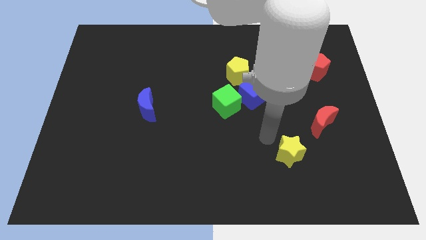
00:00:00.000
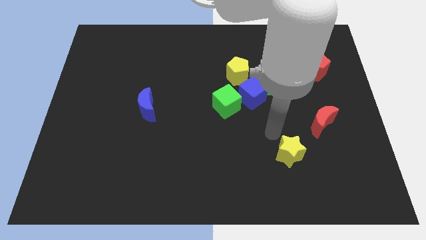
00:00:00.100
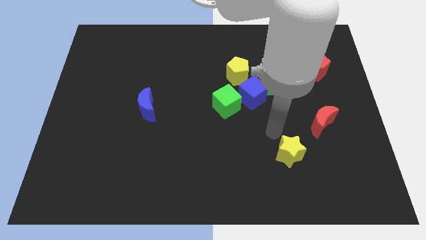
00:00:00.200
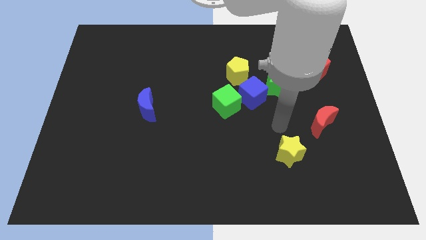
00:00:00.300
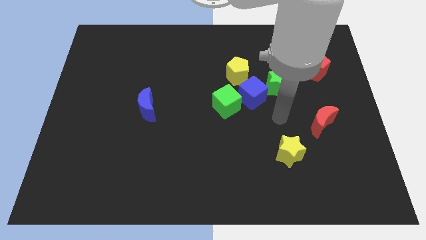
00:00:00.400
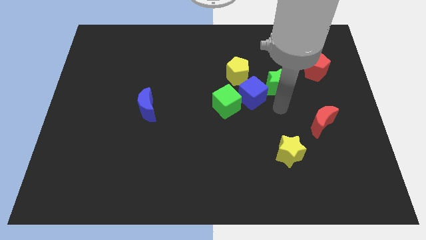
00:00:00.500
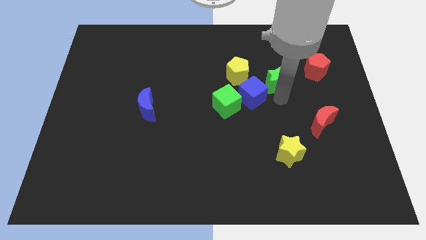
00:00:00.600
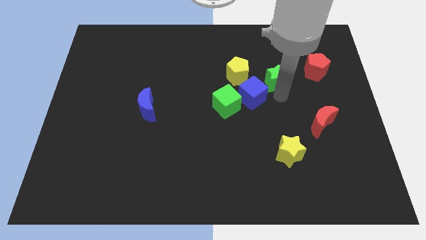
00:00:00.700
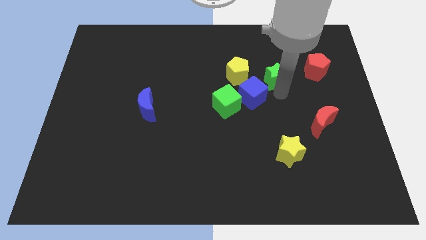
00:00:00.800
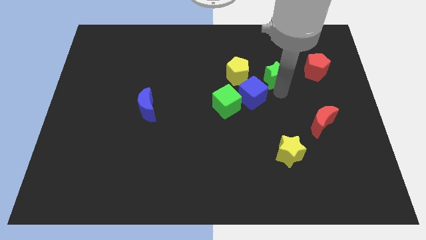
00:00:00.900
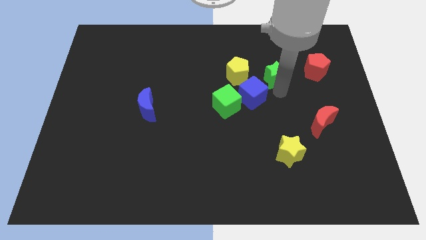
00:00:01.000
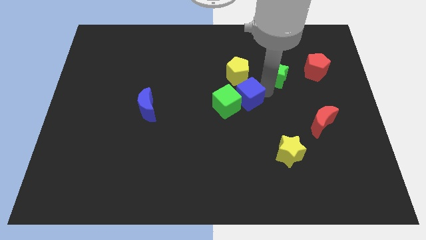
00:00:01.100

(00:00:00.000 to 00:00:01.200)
move the green star slightly top side

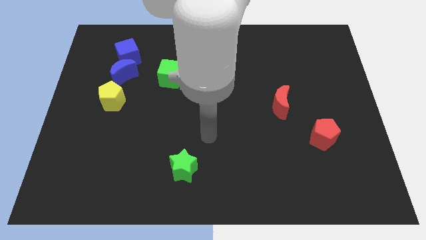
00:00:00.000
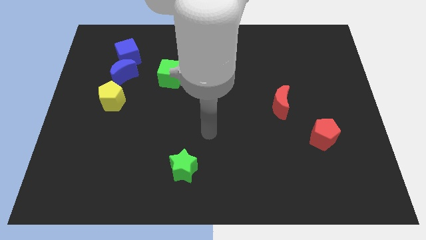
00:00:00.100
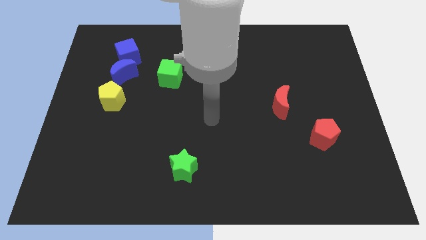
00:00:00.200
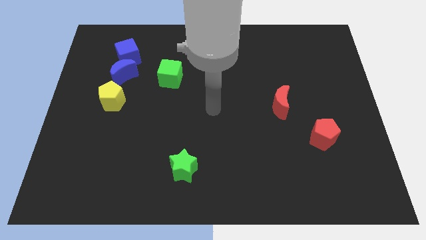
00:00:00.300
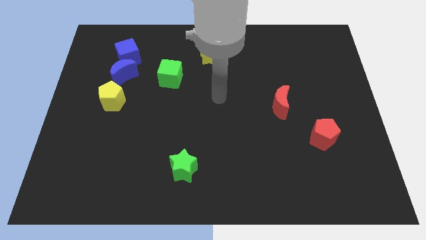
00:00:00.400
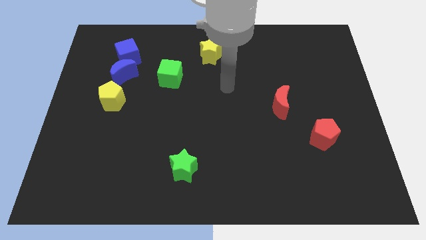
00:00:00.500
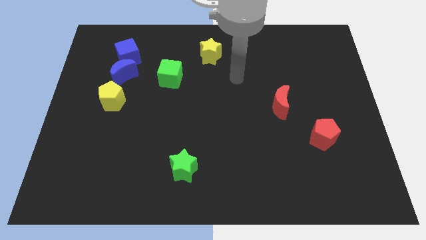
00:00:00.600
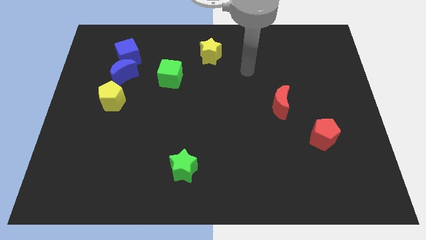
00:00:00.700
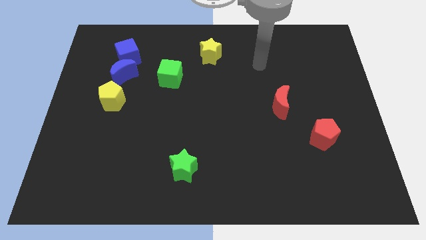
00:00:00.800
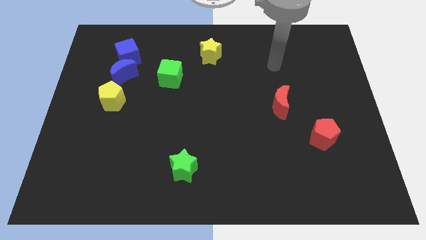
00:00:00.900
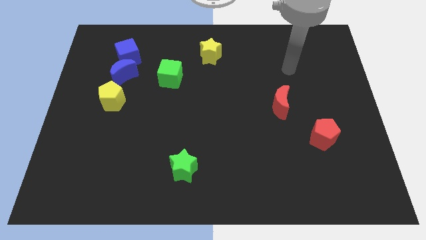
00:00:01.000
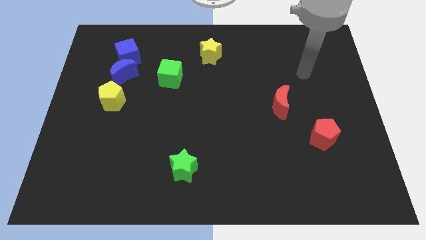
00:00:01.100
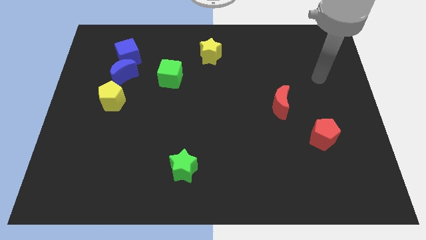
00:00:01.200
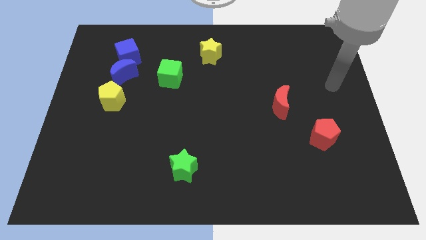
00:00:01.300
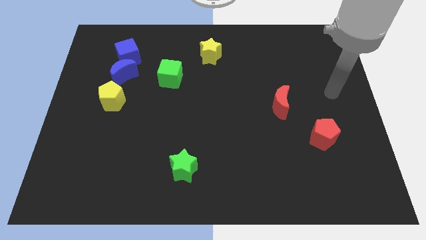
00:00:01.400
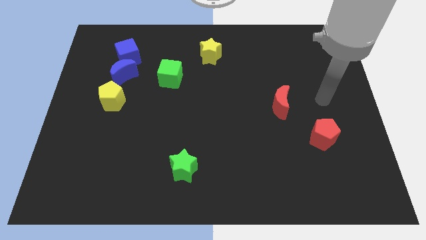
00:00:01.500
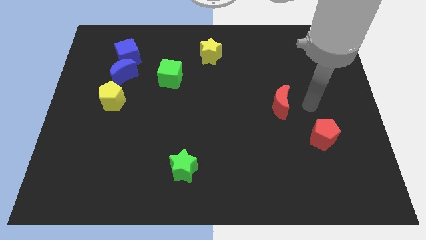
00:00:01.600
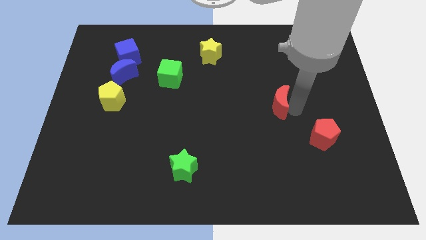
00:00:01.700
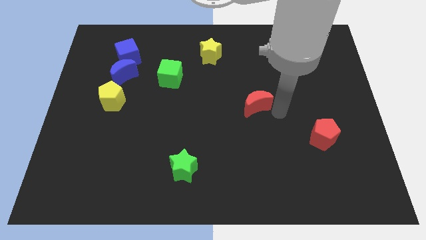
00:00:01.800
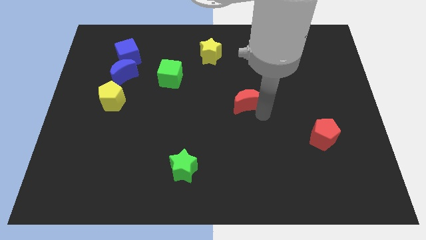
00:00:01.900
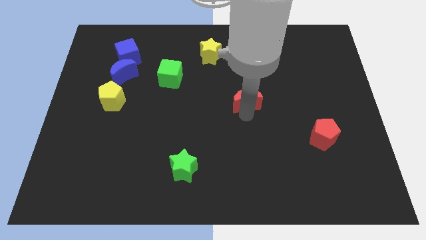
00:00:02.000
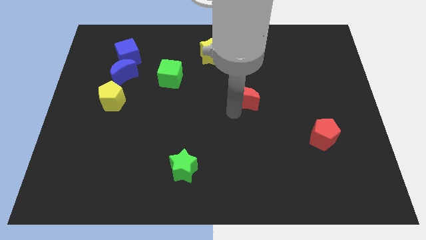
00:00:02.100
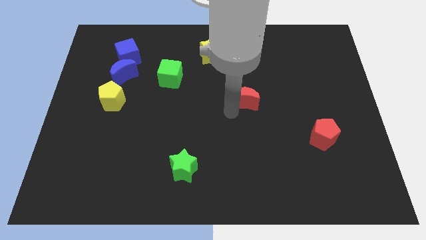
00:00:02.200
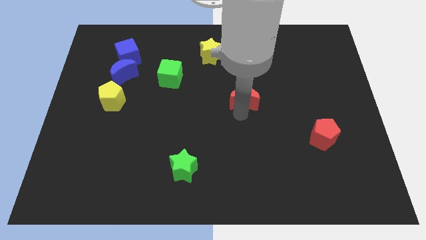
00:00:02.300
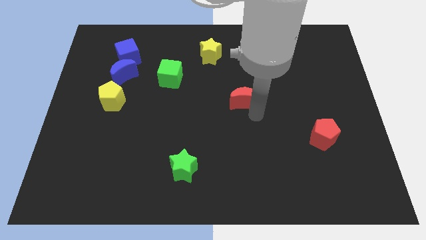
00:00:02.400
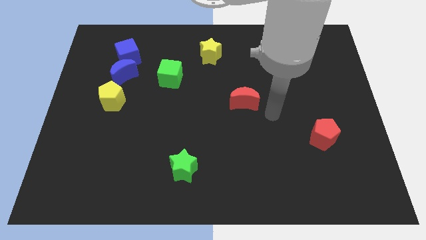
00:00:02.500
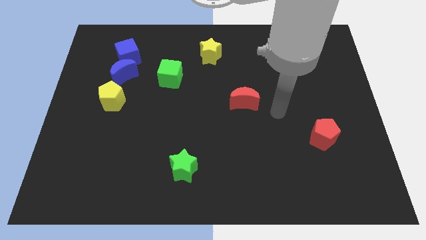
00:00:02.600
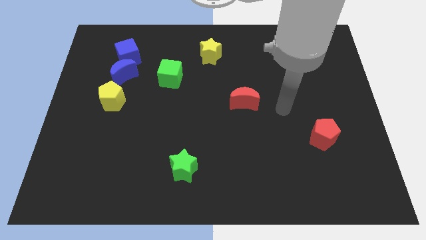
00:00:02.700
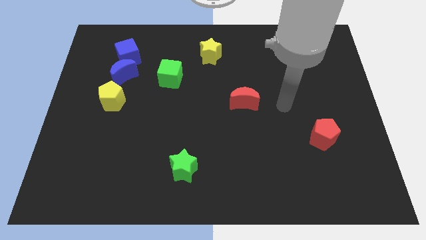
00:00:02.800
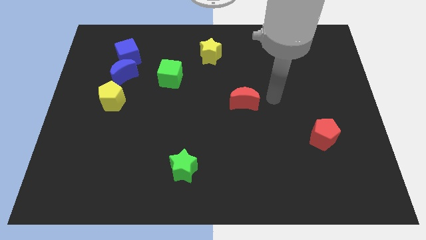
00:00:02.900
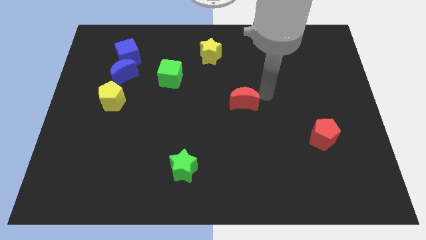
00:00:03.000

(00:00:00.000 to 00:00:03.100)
push the red moon towards the center of the board

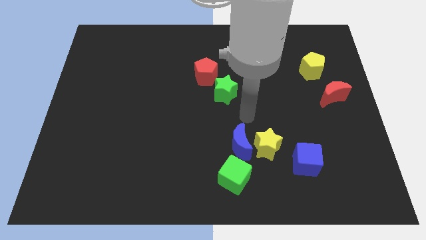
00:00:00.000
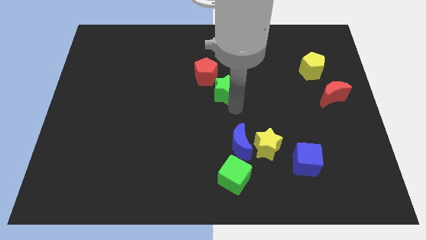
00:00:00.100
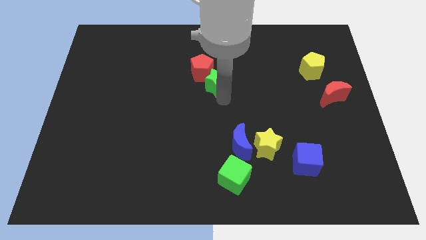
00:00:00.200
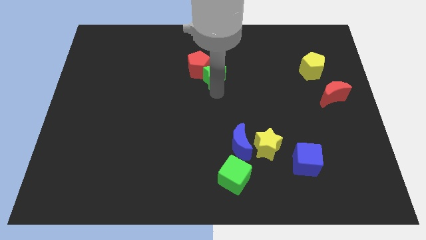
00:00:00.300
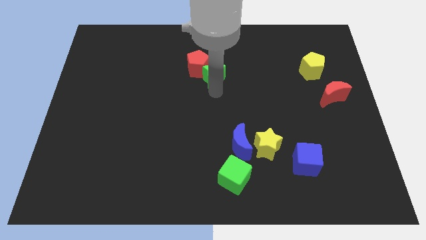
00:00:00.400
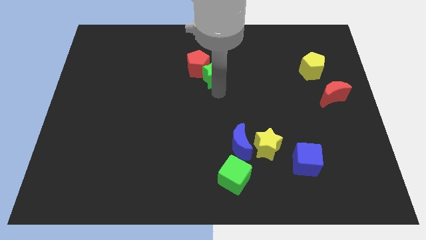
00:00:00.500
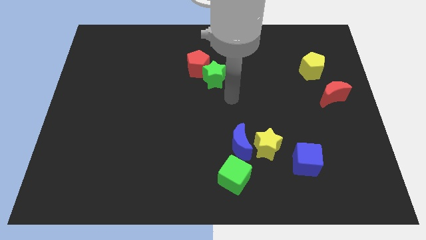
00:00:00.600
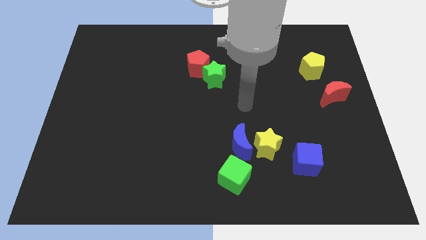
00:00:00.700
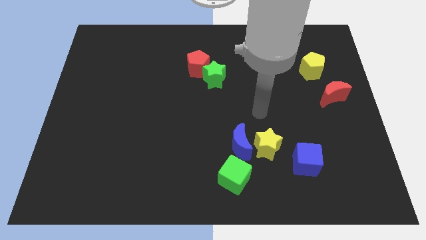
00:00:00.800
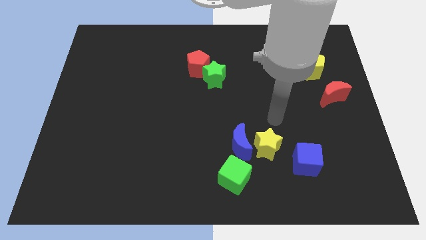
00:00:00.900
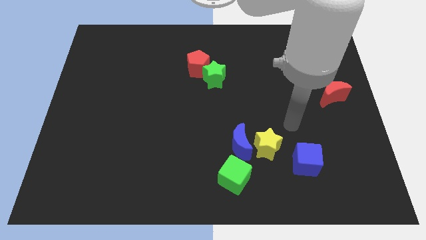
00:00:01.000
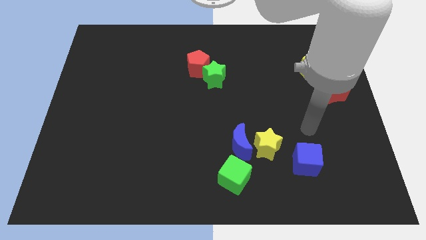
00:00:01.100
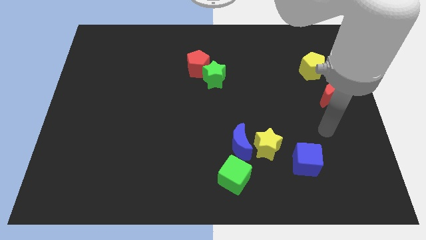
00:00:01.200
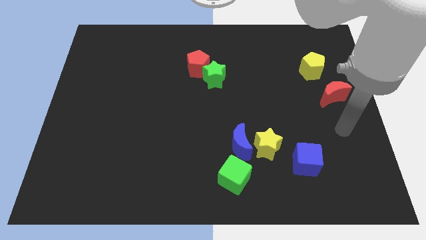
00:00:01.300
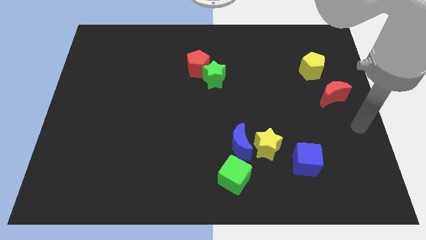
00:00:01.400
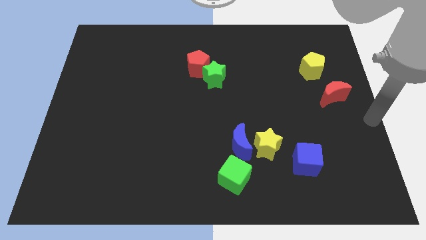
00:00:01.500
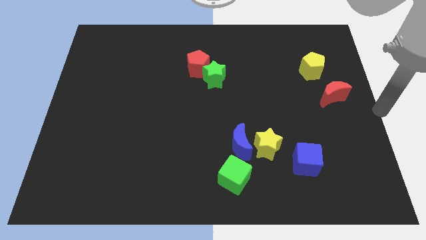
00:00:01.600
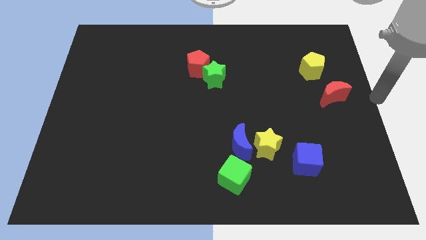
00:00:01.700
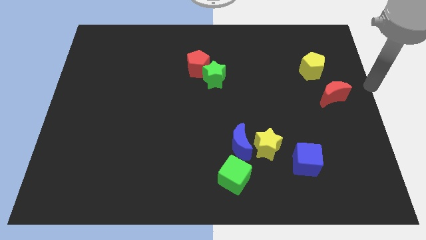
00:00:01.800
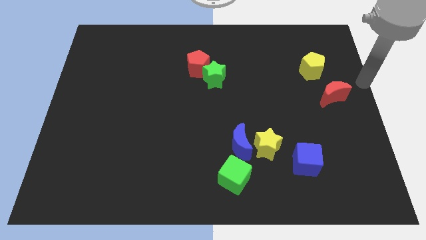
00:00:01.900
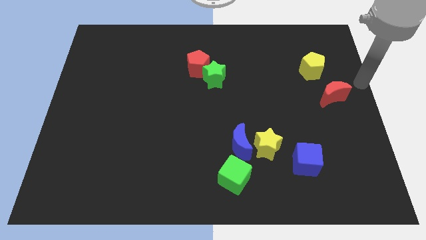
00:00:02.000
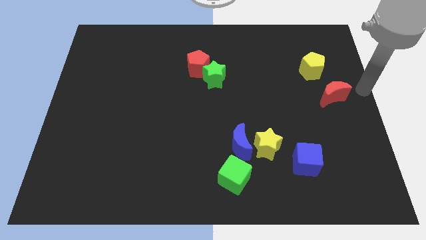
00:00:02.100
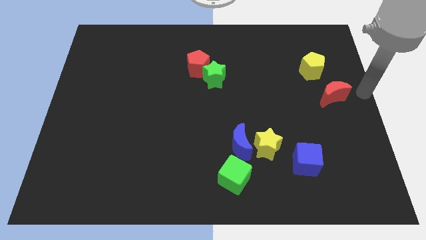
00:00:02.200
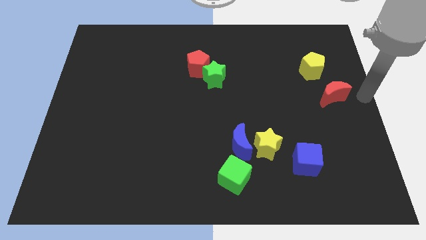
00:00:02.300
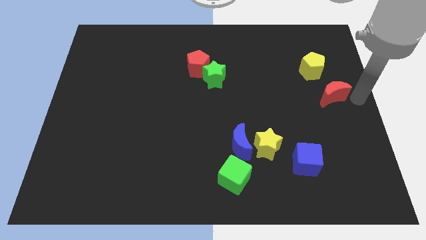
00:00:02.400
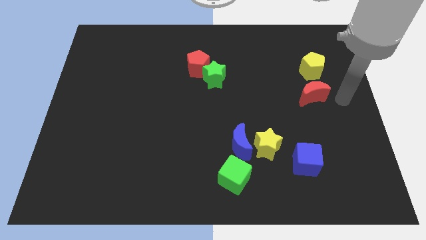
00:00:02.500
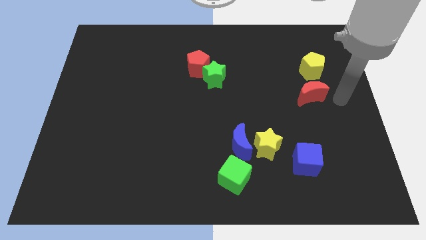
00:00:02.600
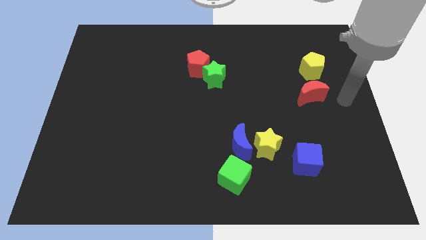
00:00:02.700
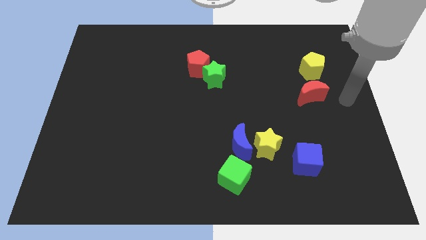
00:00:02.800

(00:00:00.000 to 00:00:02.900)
push green star into the red pentagon

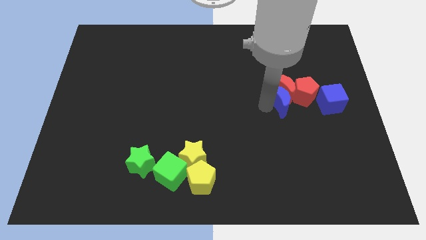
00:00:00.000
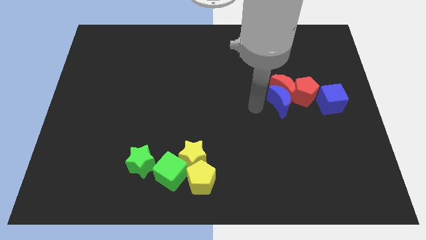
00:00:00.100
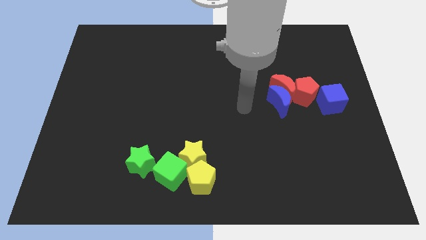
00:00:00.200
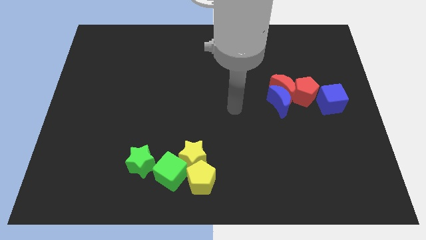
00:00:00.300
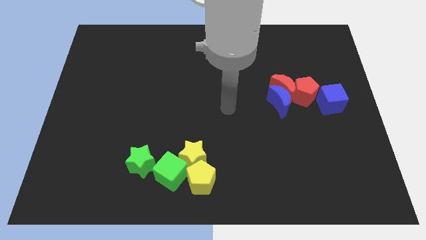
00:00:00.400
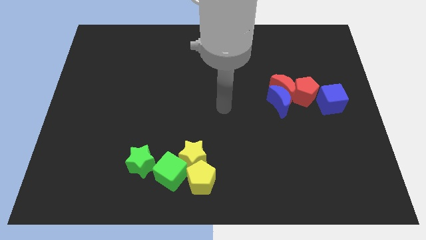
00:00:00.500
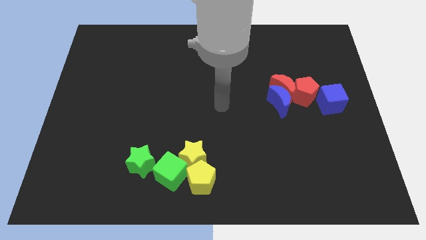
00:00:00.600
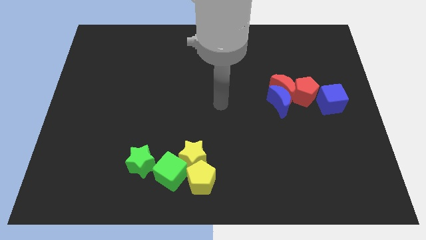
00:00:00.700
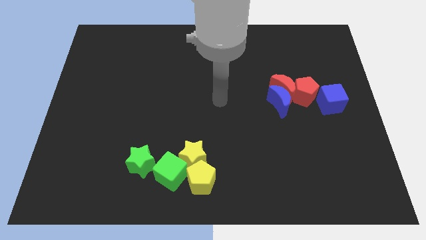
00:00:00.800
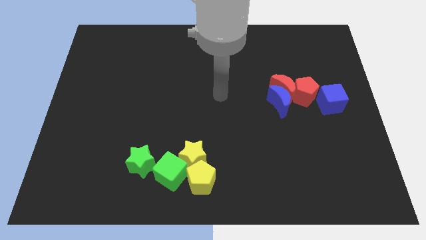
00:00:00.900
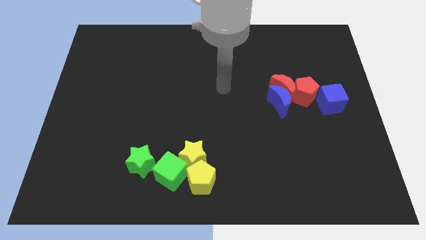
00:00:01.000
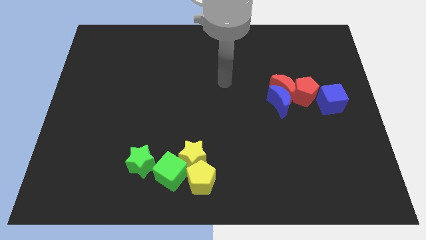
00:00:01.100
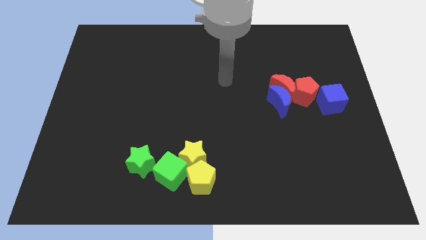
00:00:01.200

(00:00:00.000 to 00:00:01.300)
move your arm to the center of the board

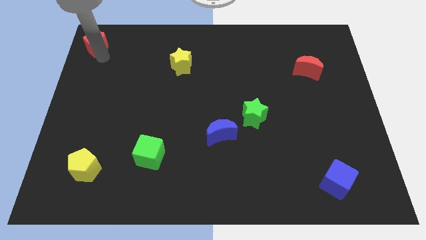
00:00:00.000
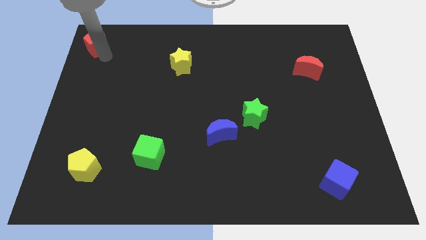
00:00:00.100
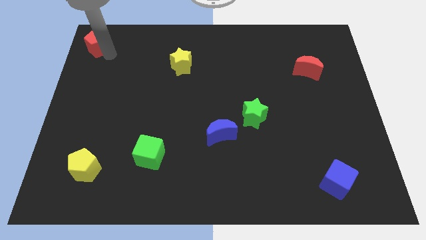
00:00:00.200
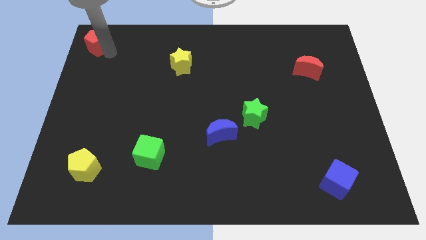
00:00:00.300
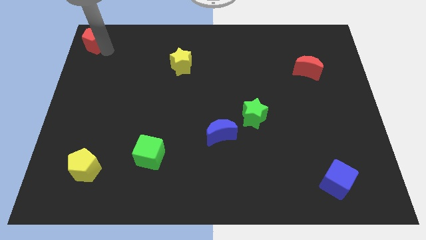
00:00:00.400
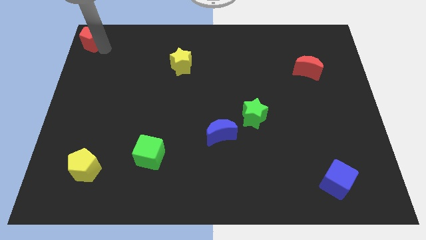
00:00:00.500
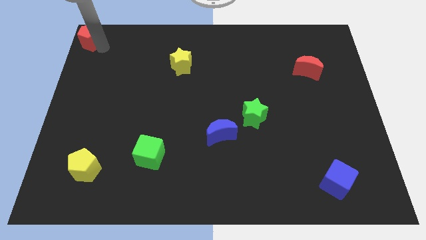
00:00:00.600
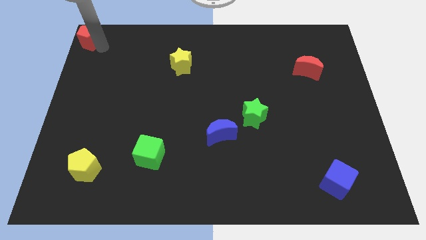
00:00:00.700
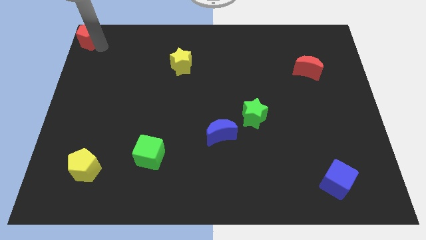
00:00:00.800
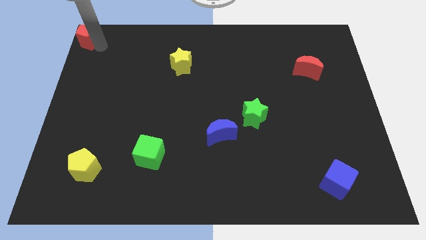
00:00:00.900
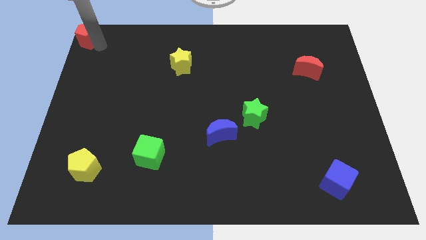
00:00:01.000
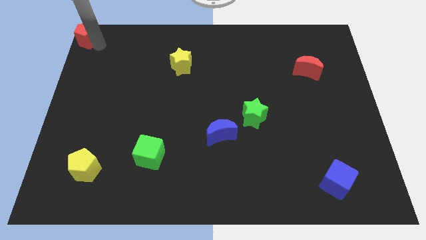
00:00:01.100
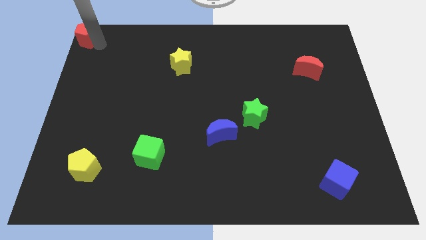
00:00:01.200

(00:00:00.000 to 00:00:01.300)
push the red pentagon to the top left corner
